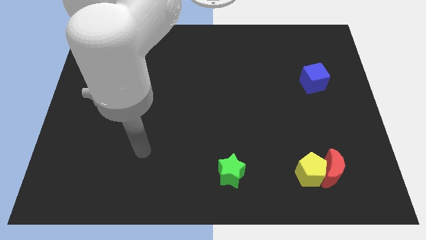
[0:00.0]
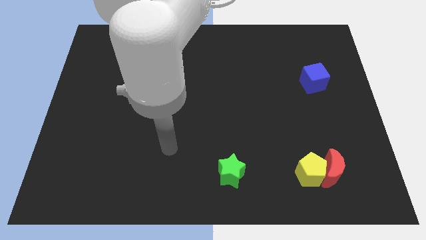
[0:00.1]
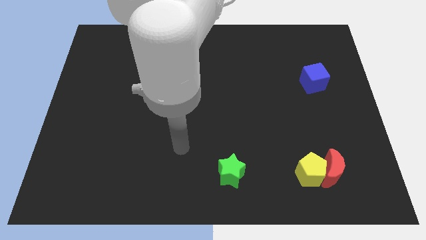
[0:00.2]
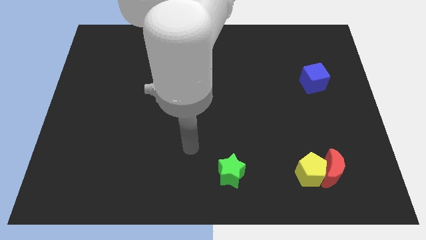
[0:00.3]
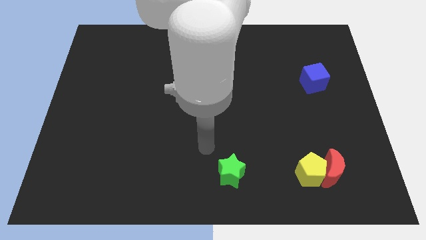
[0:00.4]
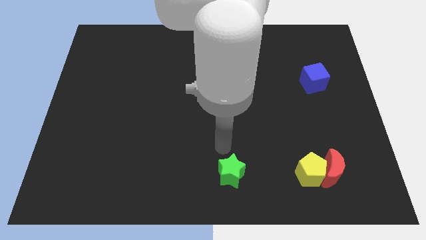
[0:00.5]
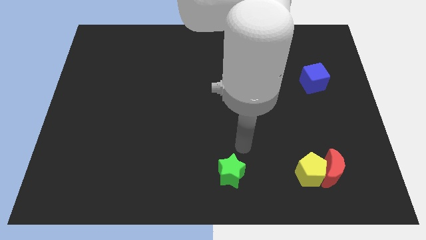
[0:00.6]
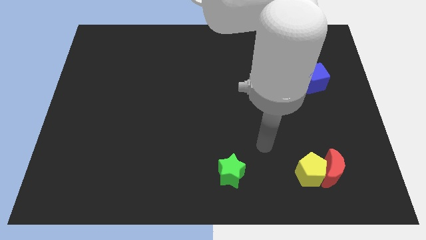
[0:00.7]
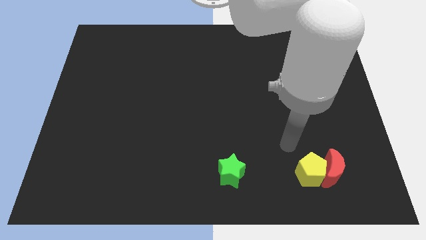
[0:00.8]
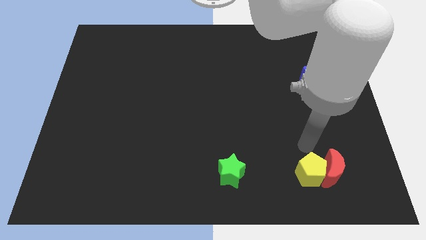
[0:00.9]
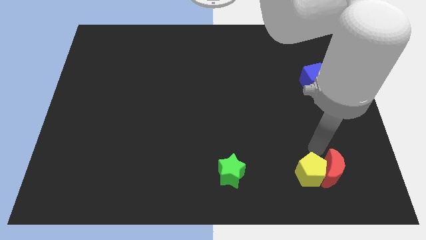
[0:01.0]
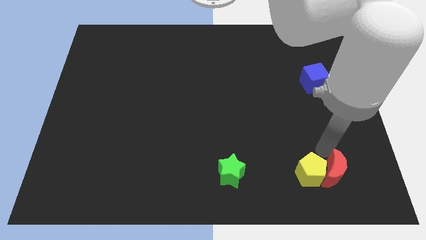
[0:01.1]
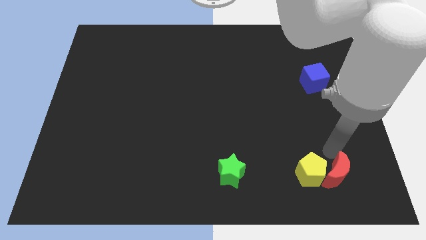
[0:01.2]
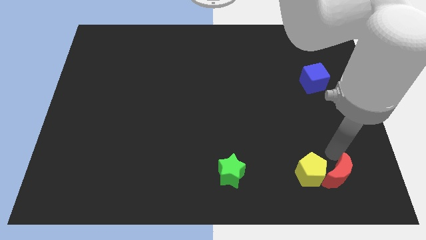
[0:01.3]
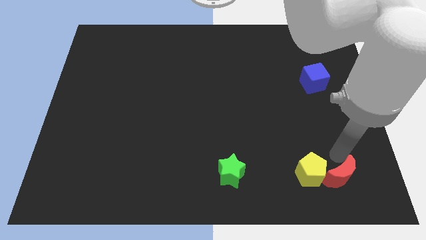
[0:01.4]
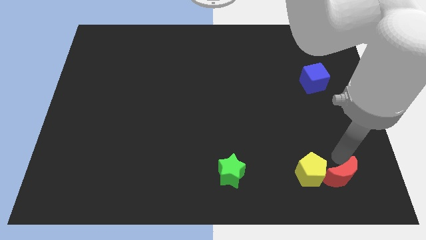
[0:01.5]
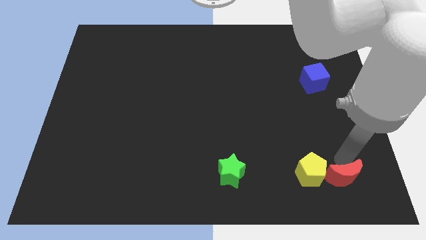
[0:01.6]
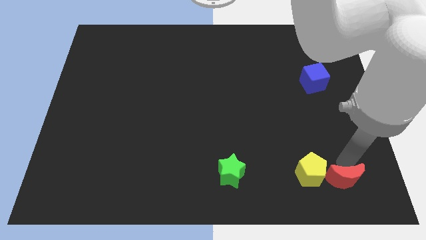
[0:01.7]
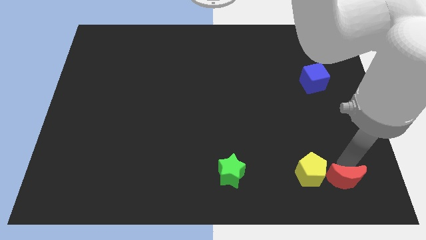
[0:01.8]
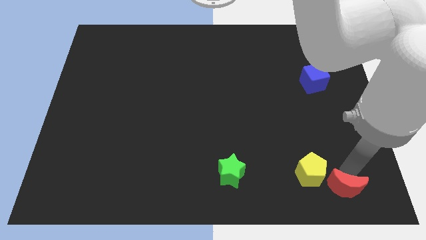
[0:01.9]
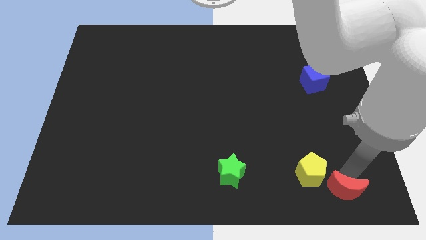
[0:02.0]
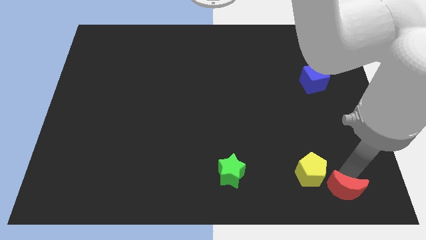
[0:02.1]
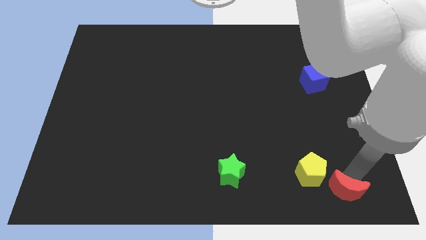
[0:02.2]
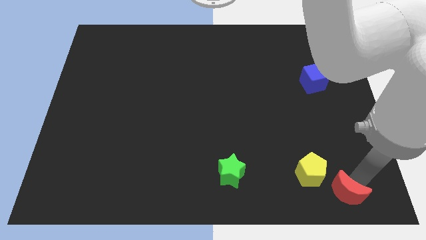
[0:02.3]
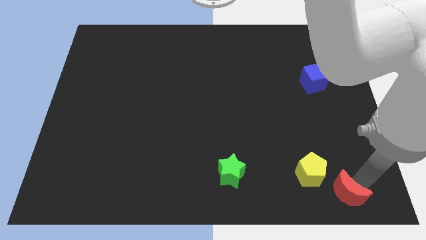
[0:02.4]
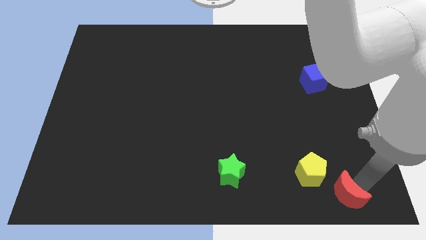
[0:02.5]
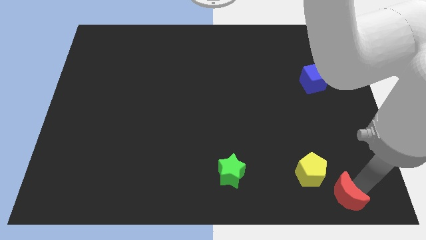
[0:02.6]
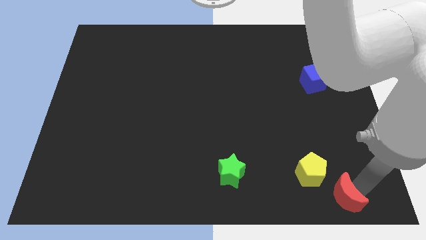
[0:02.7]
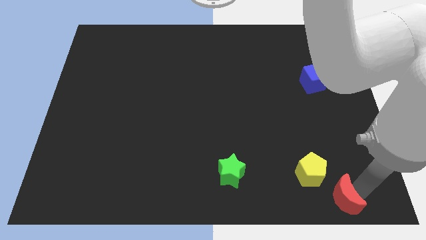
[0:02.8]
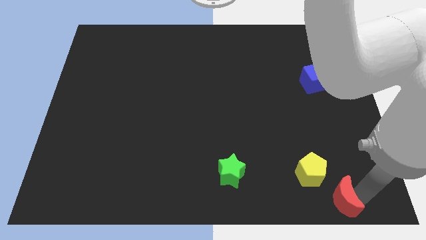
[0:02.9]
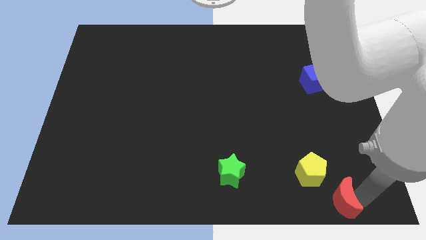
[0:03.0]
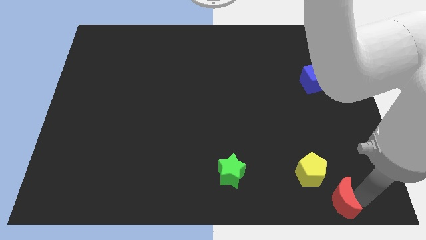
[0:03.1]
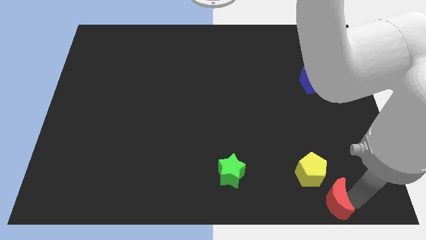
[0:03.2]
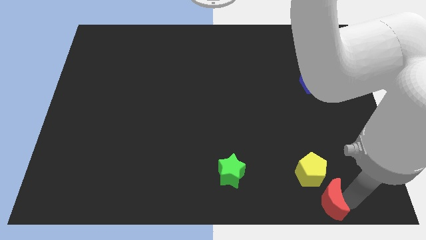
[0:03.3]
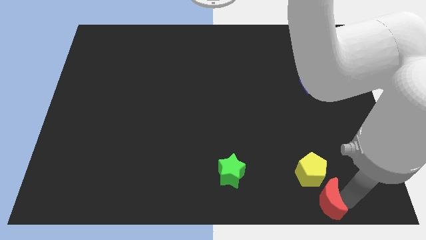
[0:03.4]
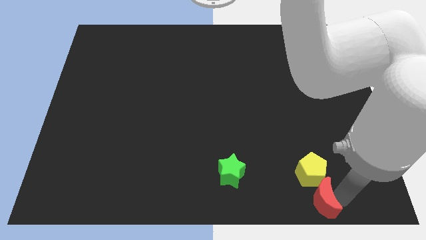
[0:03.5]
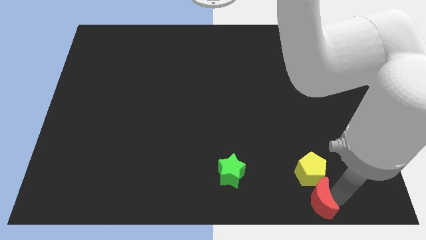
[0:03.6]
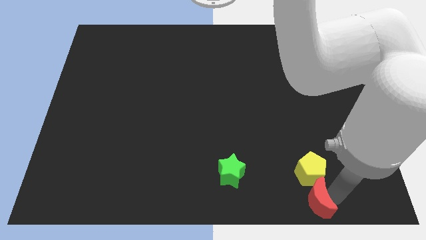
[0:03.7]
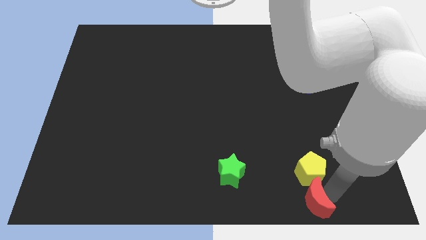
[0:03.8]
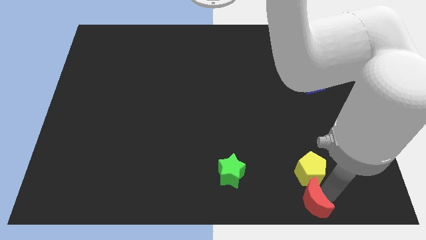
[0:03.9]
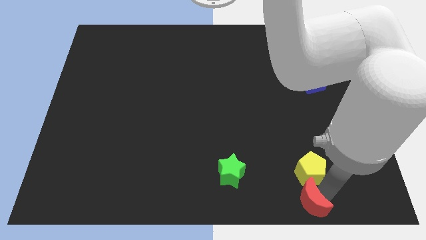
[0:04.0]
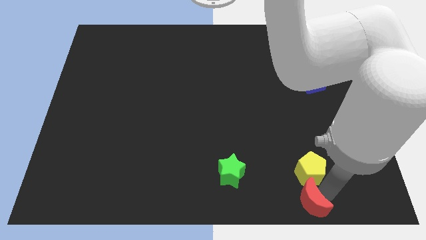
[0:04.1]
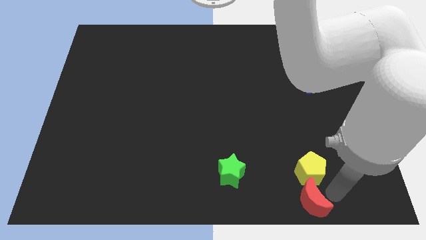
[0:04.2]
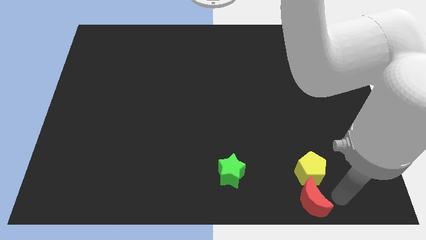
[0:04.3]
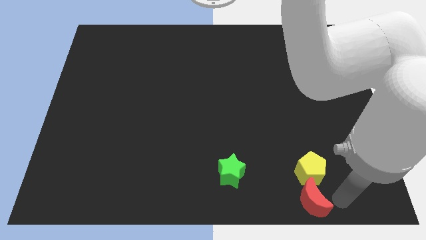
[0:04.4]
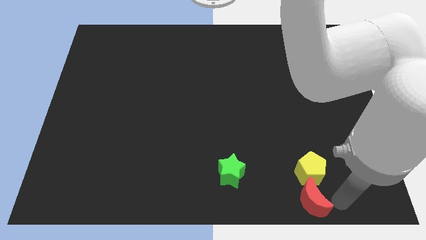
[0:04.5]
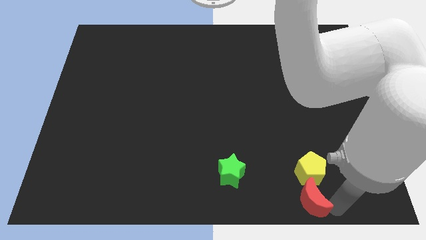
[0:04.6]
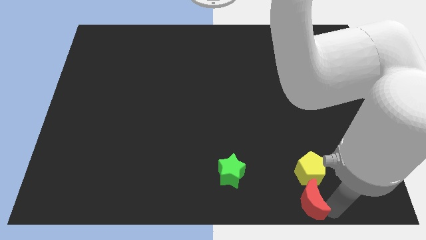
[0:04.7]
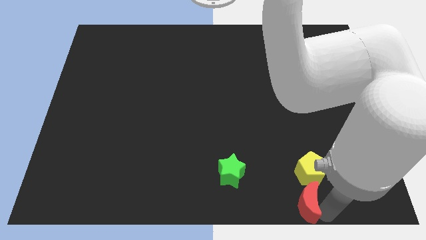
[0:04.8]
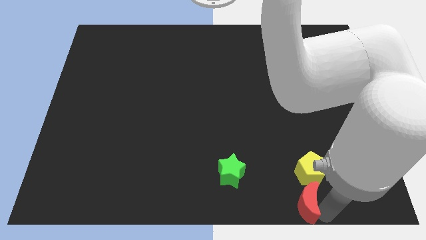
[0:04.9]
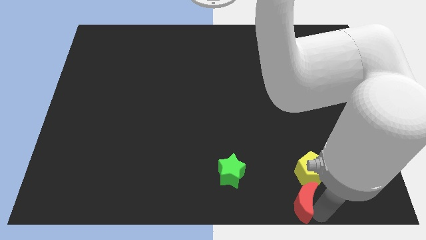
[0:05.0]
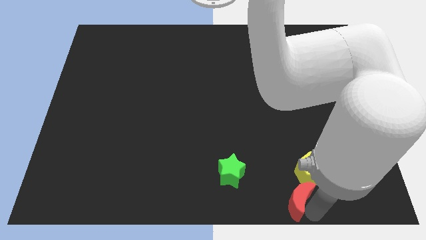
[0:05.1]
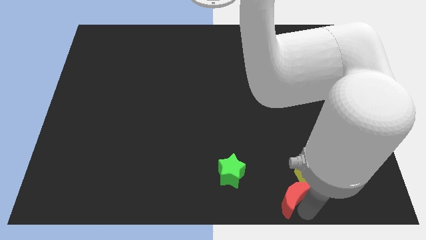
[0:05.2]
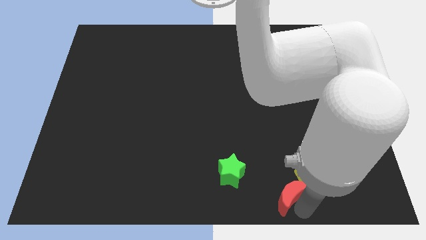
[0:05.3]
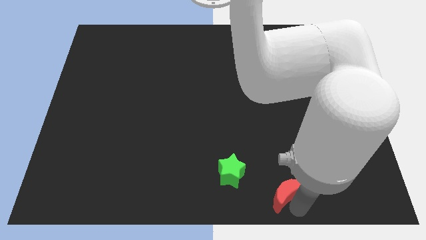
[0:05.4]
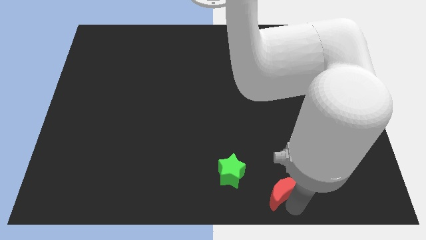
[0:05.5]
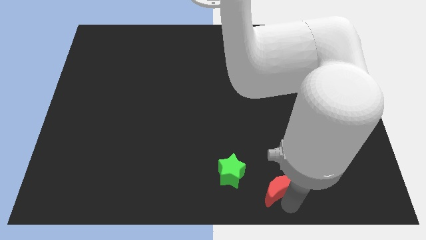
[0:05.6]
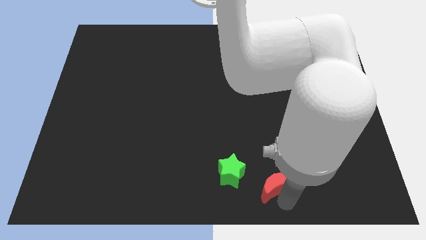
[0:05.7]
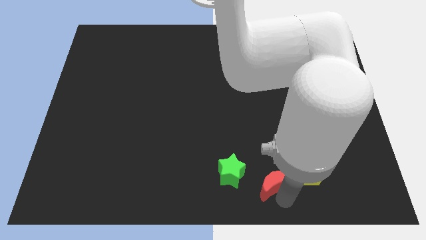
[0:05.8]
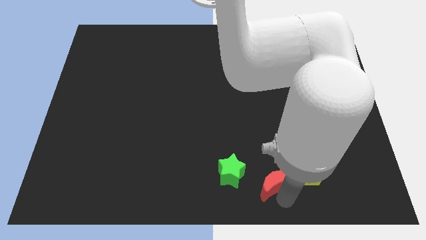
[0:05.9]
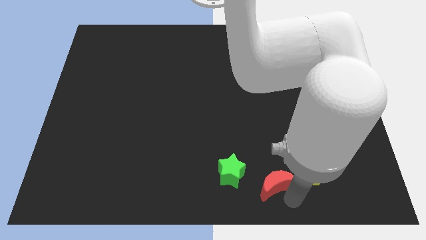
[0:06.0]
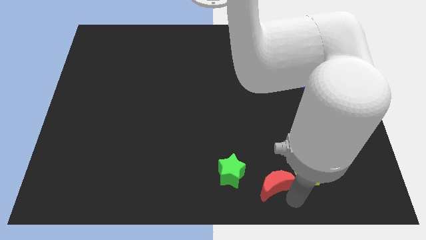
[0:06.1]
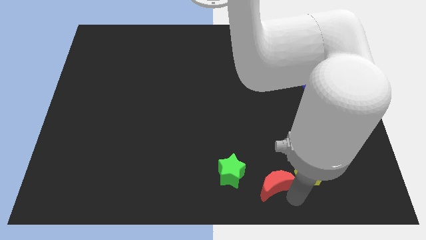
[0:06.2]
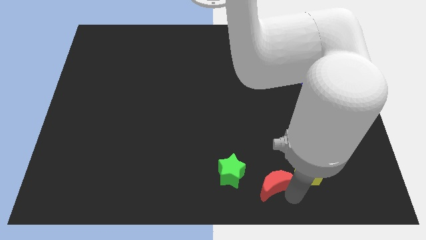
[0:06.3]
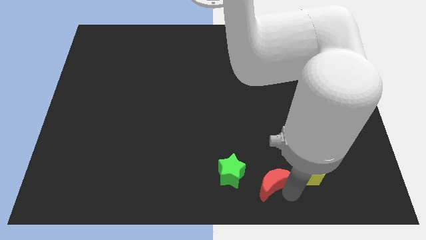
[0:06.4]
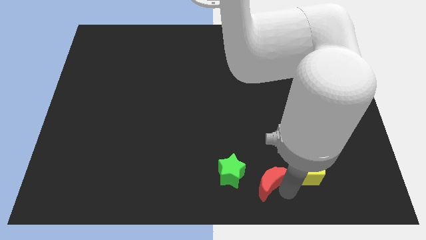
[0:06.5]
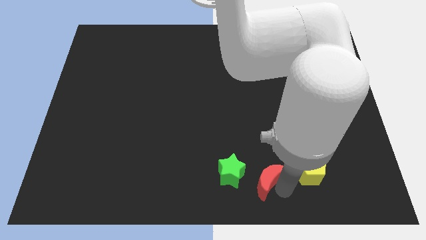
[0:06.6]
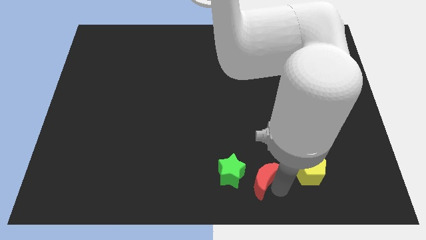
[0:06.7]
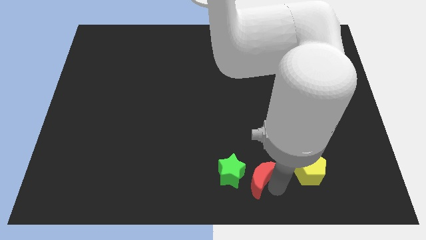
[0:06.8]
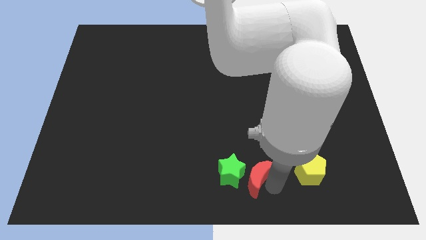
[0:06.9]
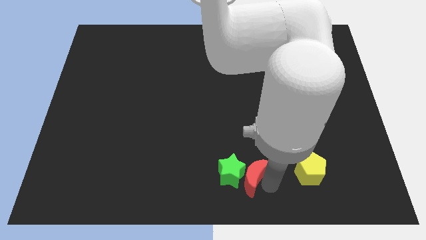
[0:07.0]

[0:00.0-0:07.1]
push the red block towards the green block

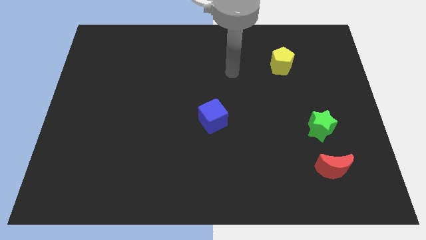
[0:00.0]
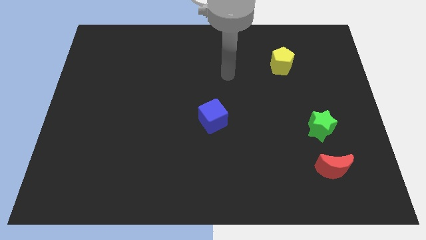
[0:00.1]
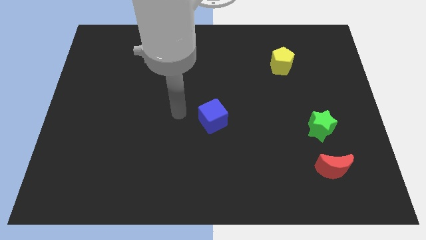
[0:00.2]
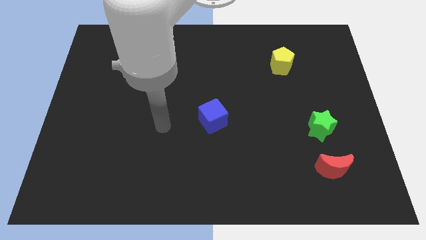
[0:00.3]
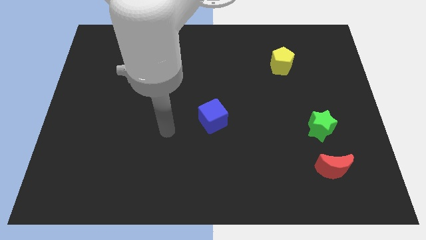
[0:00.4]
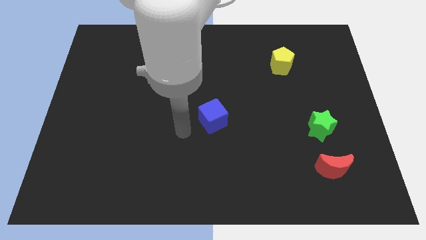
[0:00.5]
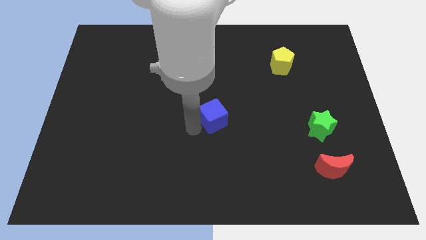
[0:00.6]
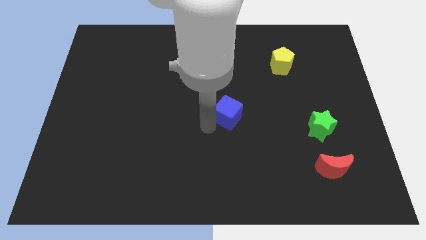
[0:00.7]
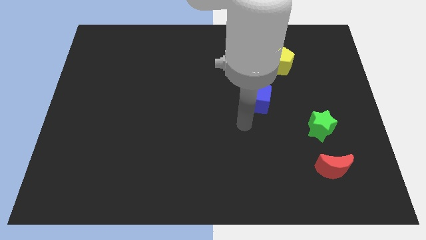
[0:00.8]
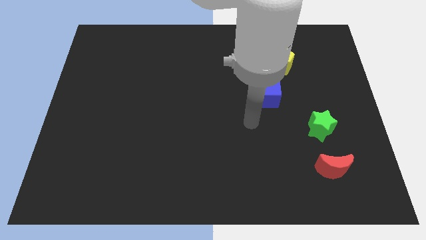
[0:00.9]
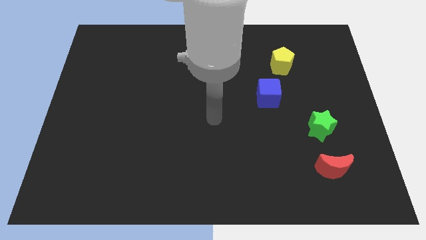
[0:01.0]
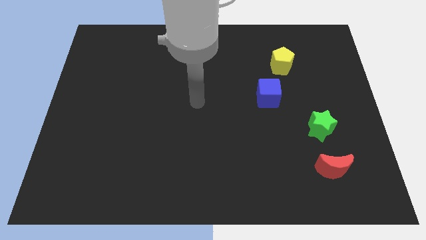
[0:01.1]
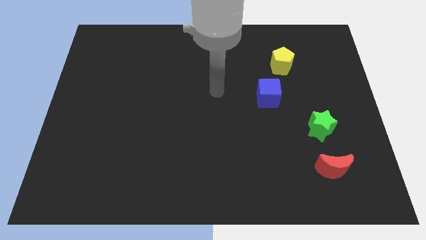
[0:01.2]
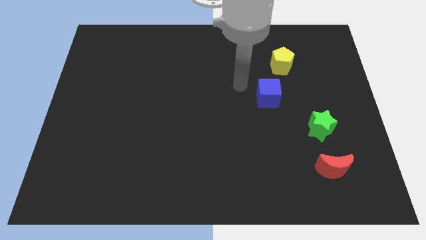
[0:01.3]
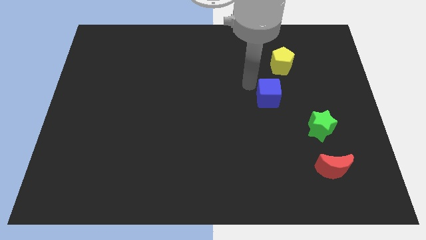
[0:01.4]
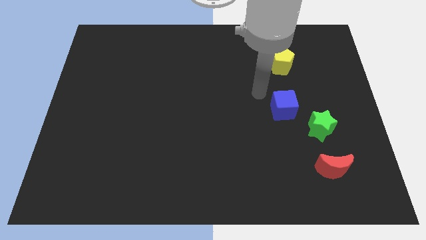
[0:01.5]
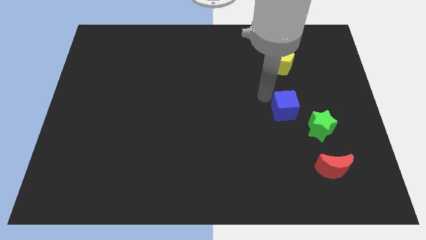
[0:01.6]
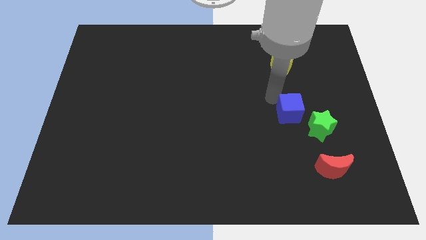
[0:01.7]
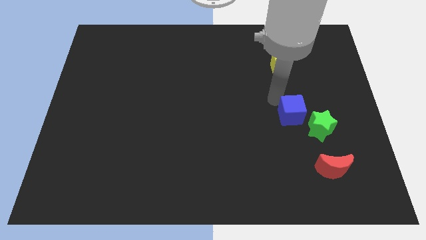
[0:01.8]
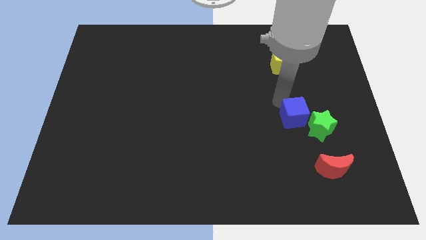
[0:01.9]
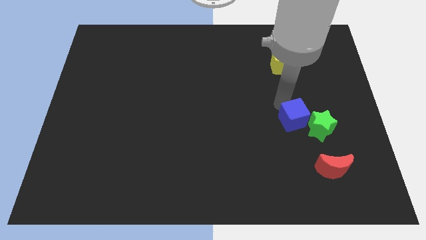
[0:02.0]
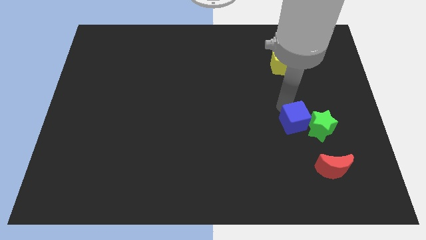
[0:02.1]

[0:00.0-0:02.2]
move the cube close to the star
